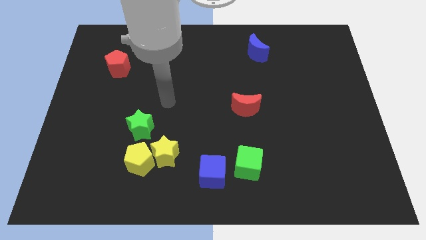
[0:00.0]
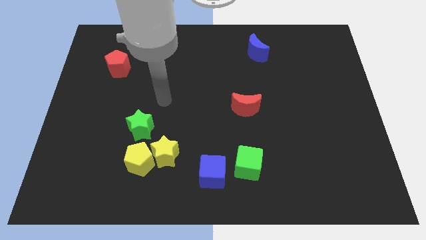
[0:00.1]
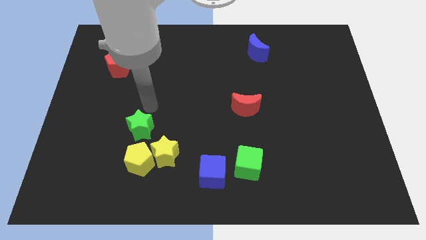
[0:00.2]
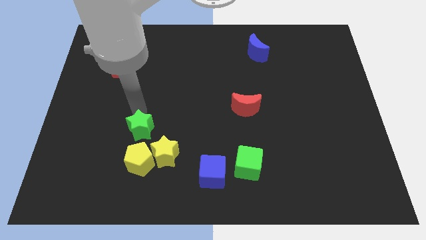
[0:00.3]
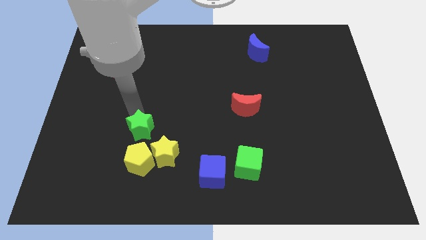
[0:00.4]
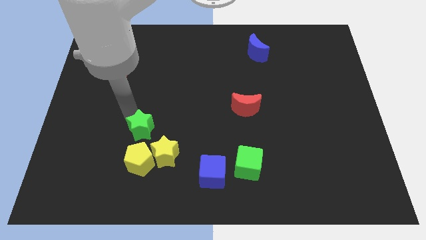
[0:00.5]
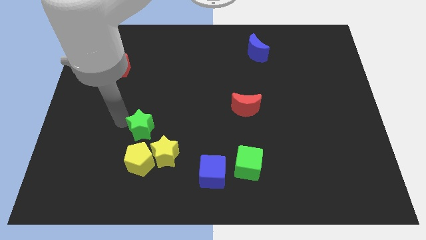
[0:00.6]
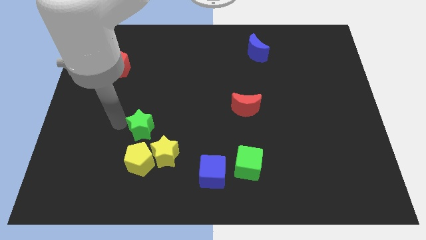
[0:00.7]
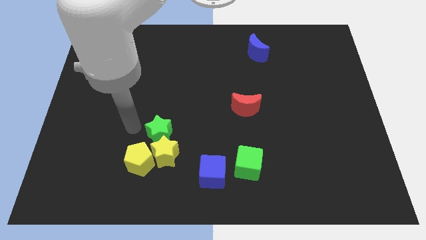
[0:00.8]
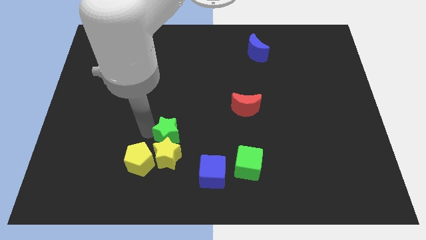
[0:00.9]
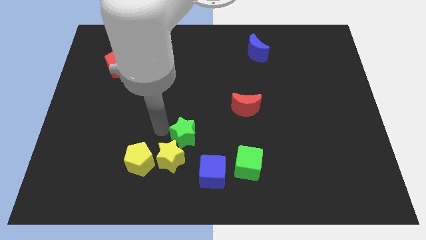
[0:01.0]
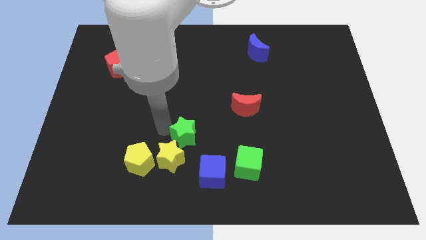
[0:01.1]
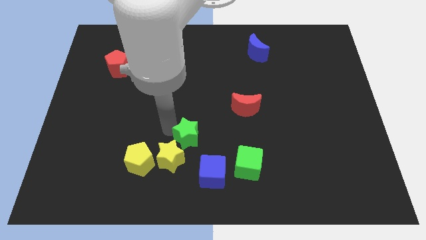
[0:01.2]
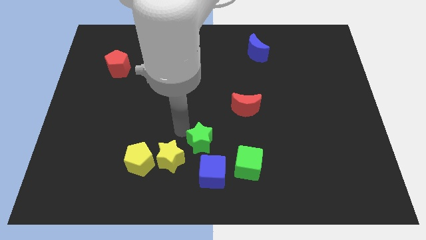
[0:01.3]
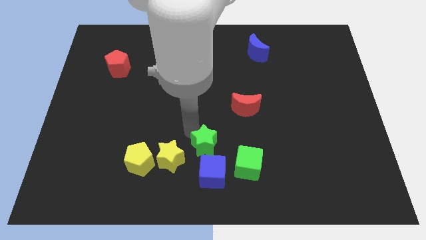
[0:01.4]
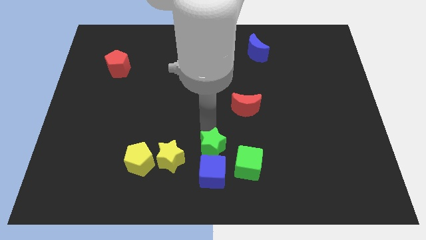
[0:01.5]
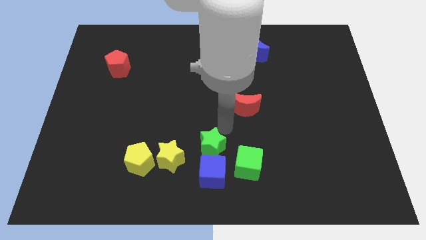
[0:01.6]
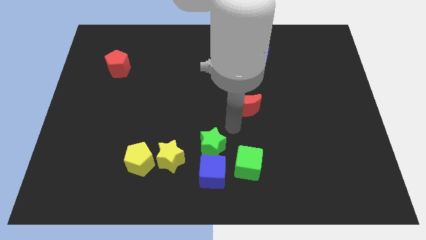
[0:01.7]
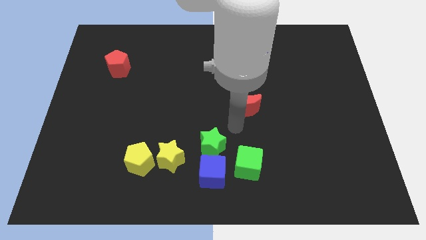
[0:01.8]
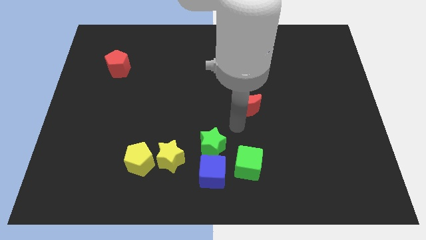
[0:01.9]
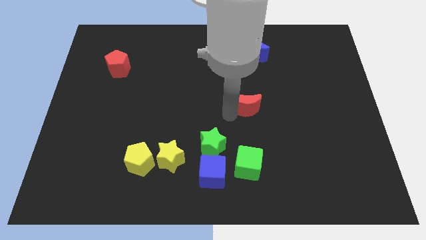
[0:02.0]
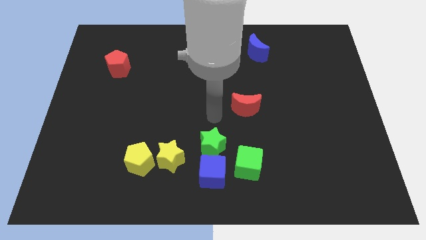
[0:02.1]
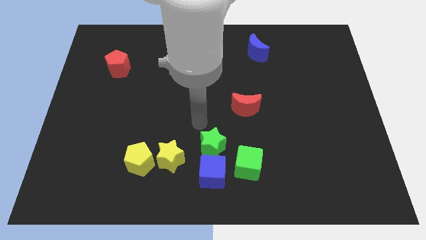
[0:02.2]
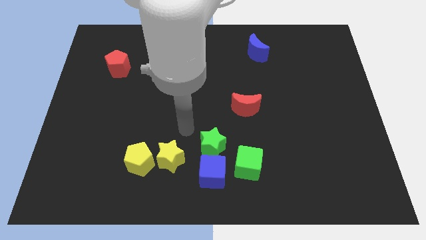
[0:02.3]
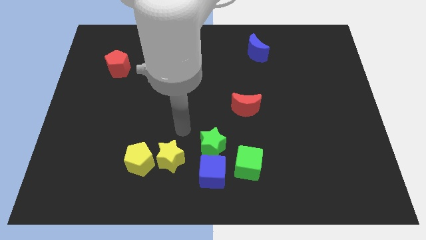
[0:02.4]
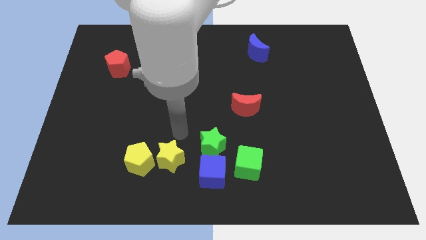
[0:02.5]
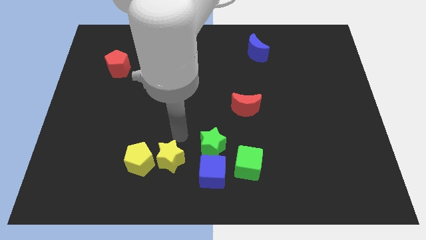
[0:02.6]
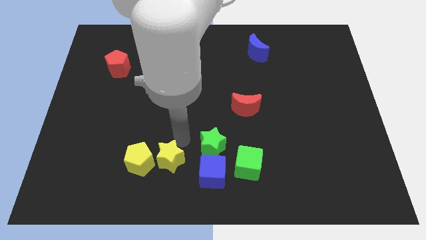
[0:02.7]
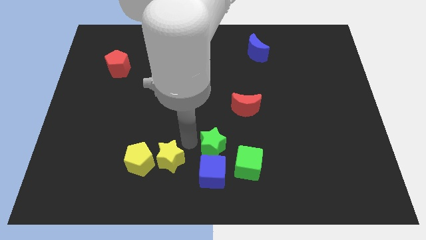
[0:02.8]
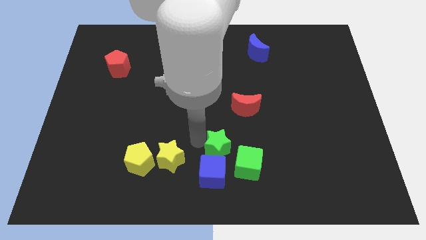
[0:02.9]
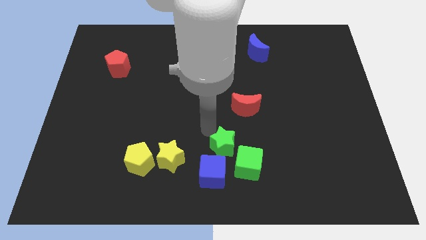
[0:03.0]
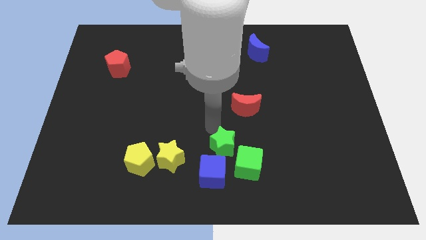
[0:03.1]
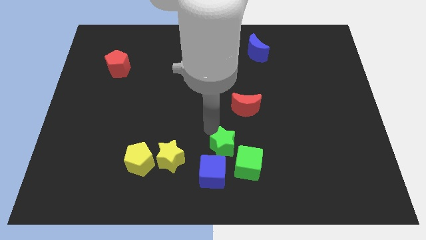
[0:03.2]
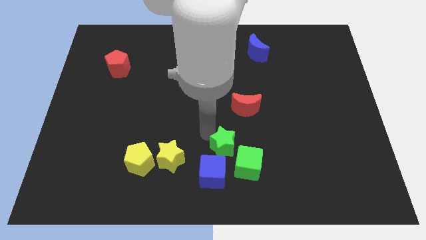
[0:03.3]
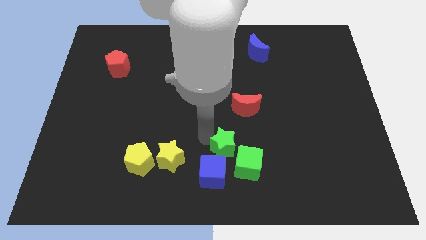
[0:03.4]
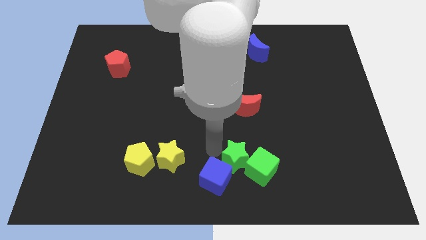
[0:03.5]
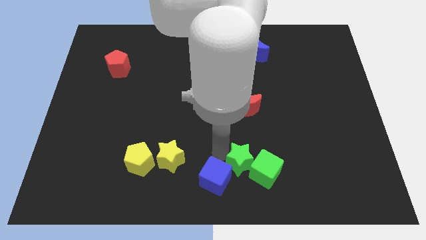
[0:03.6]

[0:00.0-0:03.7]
slide the green star to the top left side of the green cube

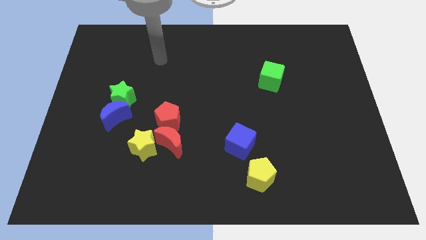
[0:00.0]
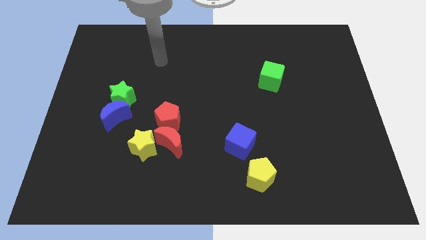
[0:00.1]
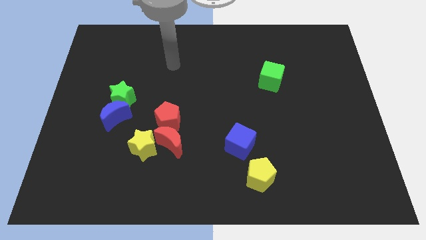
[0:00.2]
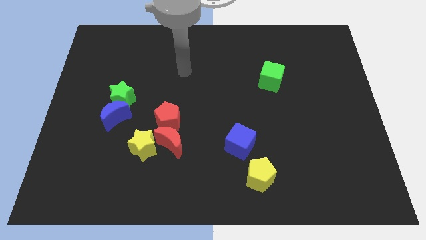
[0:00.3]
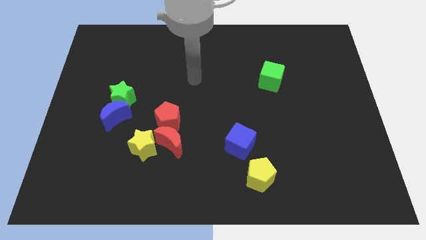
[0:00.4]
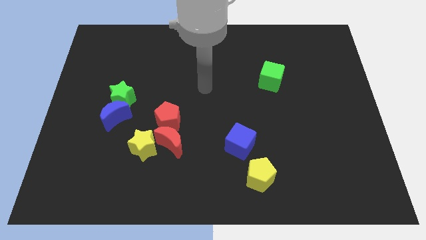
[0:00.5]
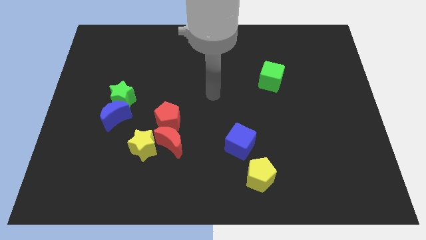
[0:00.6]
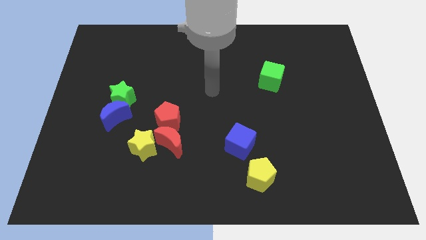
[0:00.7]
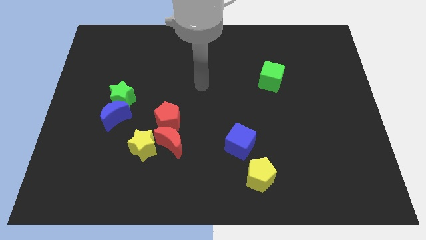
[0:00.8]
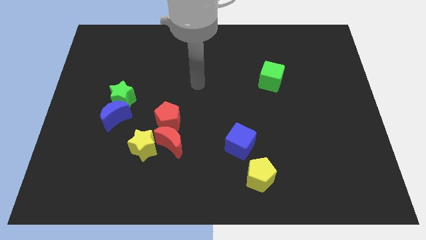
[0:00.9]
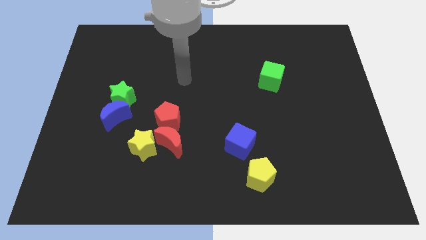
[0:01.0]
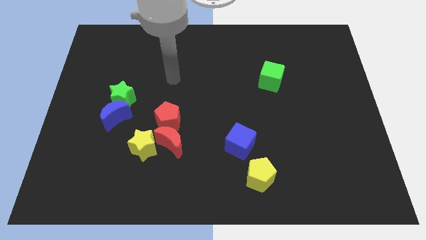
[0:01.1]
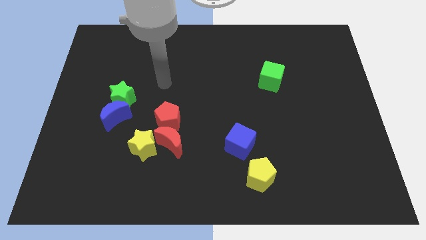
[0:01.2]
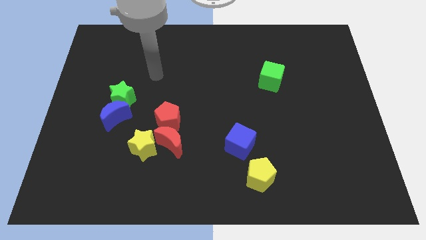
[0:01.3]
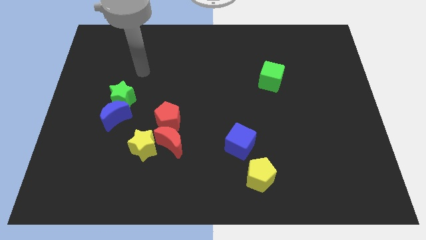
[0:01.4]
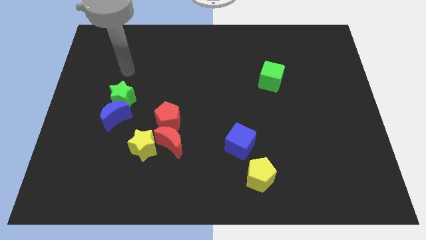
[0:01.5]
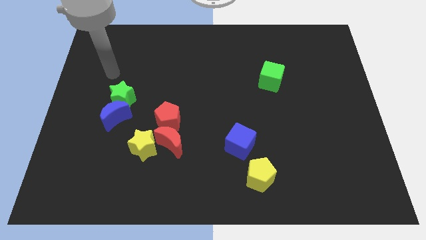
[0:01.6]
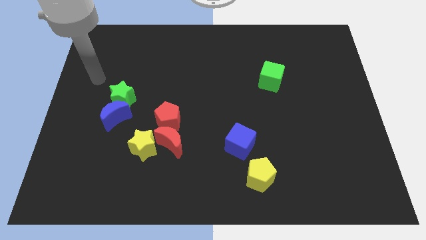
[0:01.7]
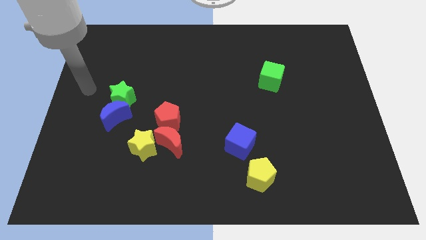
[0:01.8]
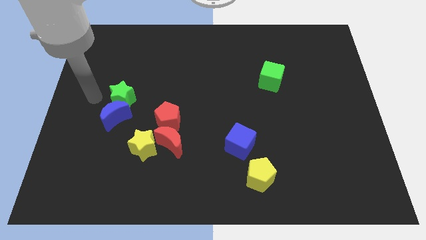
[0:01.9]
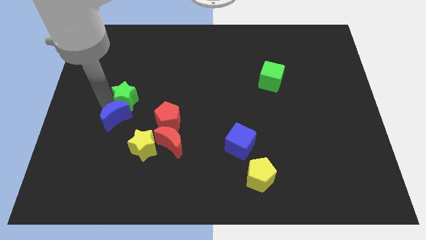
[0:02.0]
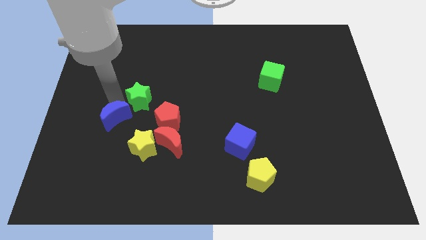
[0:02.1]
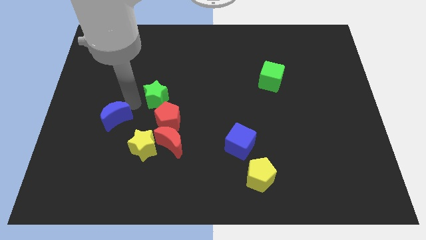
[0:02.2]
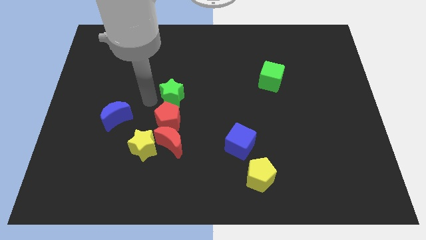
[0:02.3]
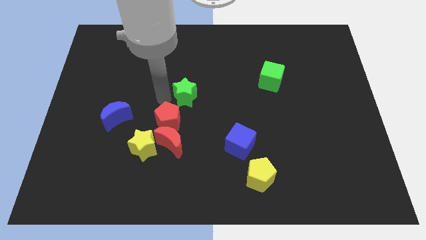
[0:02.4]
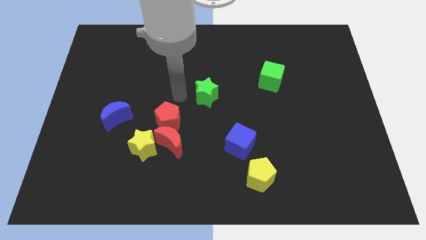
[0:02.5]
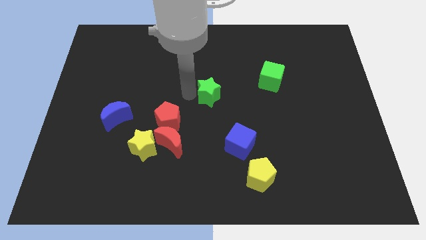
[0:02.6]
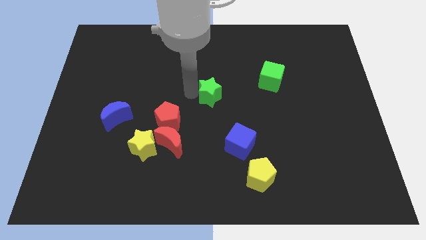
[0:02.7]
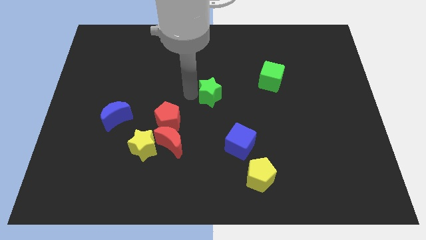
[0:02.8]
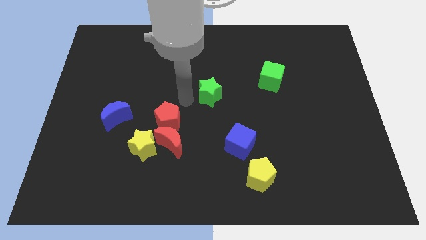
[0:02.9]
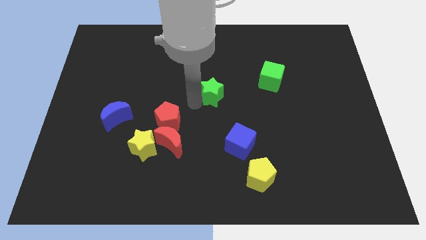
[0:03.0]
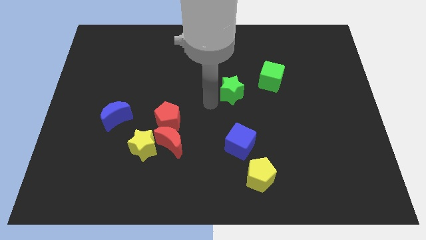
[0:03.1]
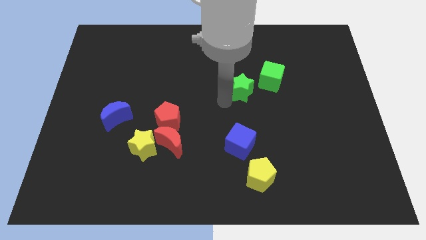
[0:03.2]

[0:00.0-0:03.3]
push the green star to the right

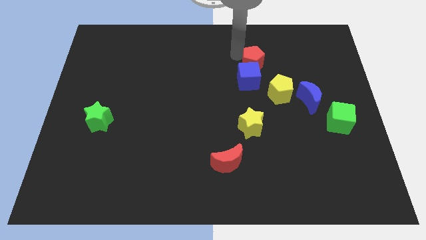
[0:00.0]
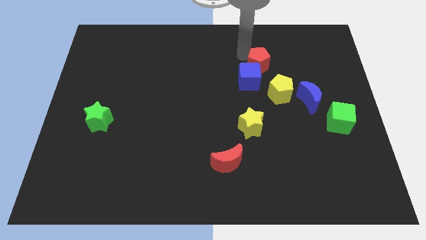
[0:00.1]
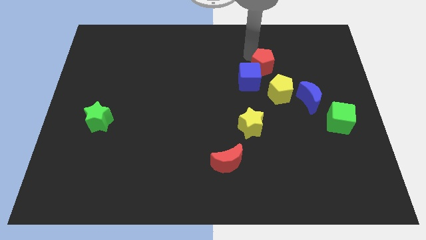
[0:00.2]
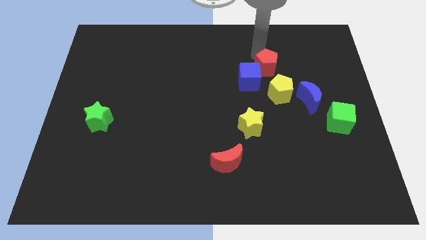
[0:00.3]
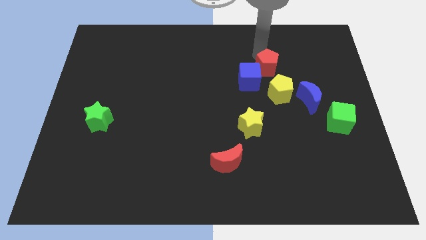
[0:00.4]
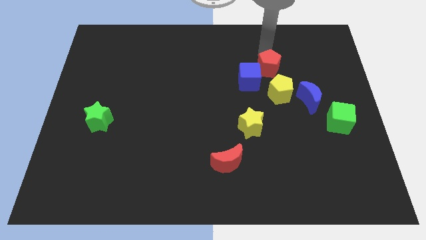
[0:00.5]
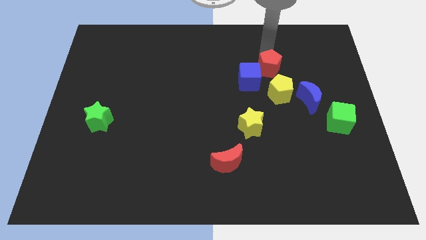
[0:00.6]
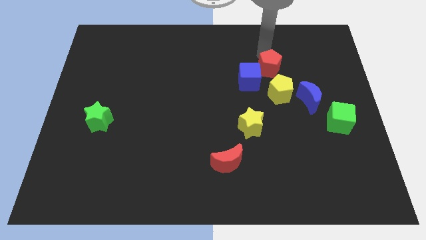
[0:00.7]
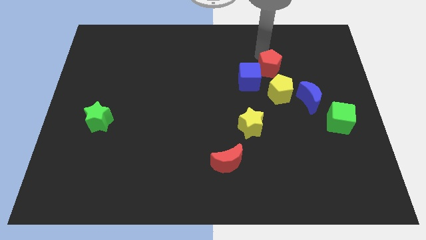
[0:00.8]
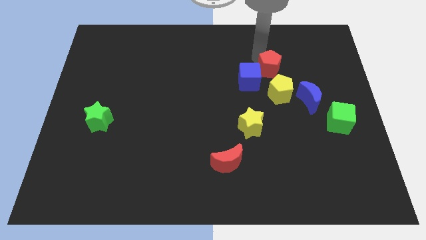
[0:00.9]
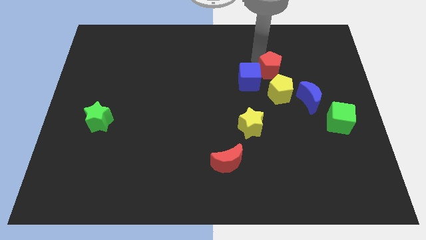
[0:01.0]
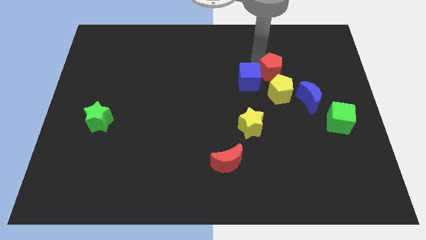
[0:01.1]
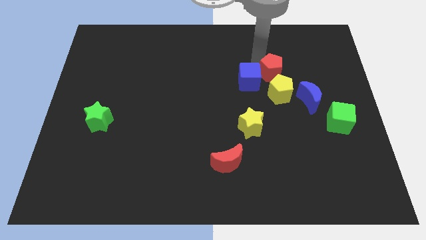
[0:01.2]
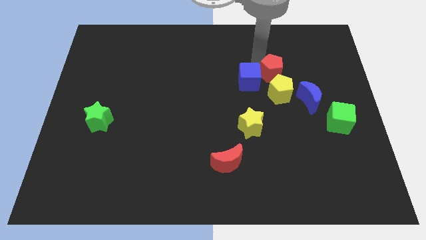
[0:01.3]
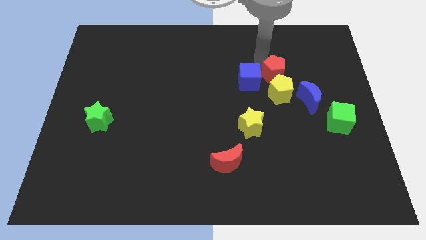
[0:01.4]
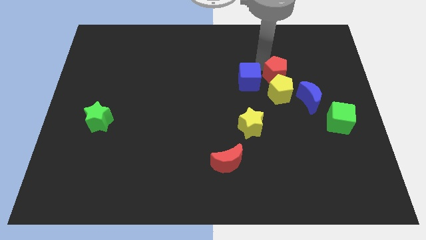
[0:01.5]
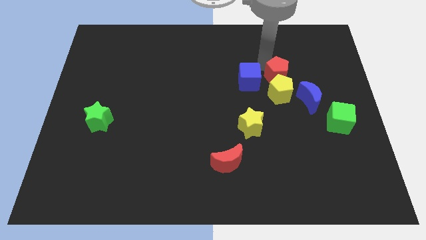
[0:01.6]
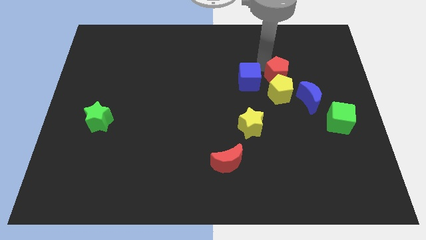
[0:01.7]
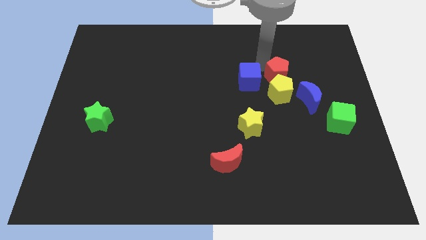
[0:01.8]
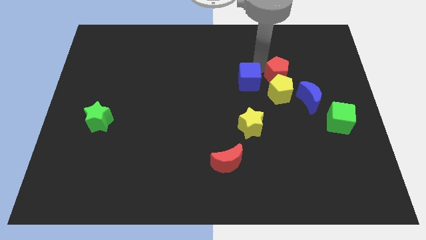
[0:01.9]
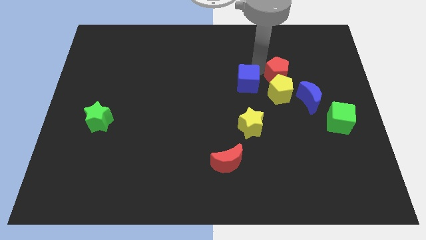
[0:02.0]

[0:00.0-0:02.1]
place red pentagon on top of yellow pentagon
